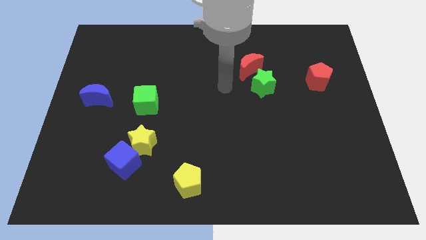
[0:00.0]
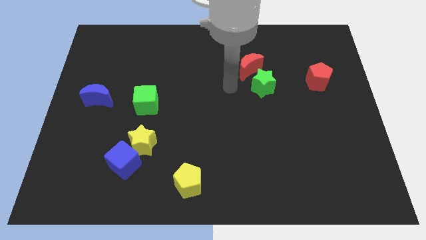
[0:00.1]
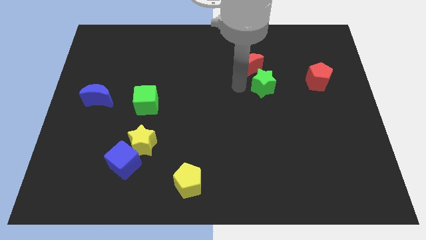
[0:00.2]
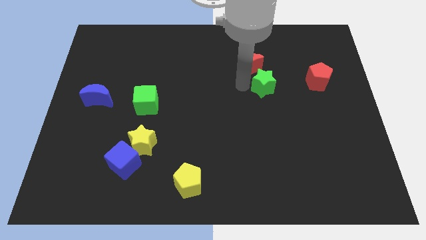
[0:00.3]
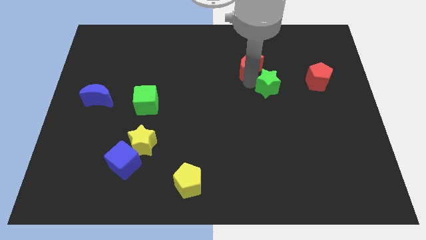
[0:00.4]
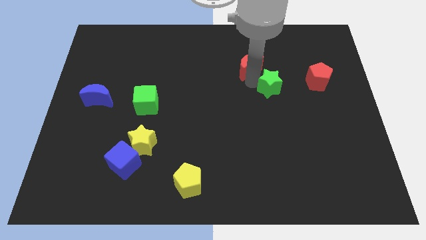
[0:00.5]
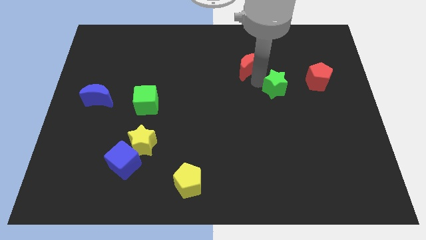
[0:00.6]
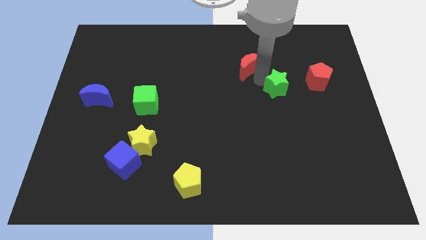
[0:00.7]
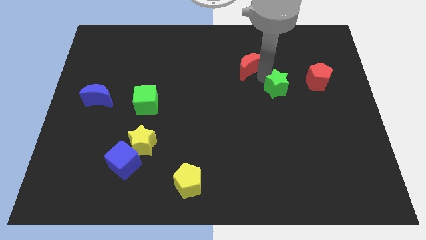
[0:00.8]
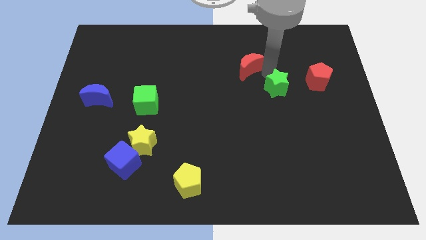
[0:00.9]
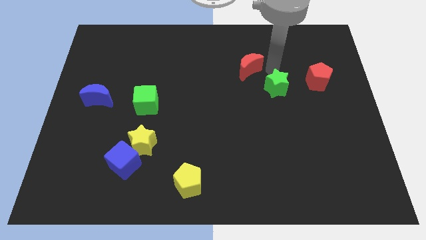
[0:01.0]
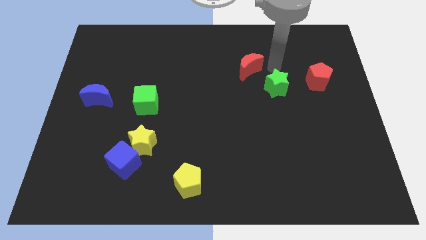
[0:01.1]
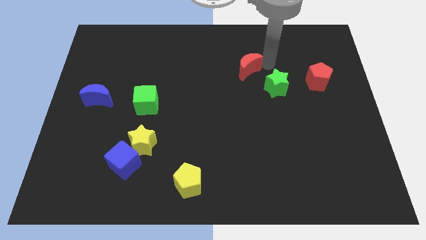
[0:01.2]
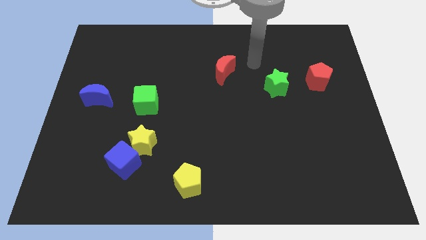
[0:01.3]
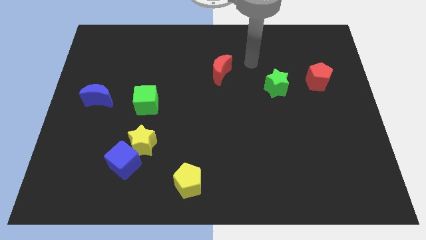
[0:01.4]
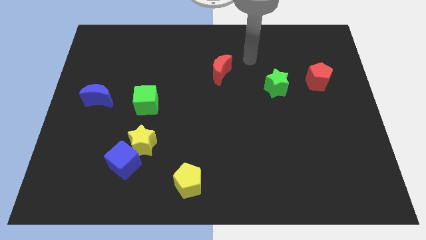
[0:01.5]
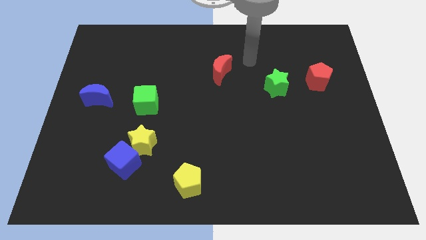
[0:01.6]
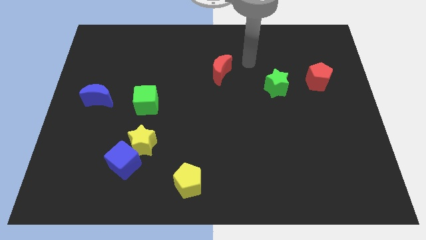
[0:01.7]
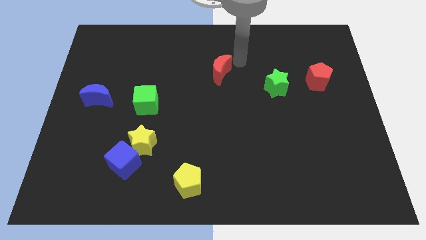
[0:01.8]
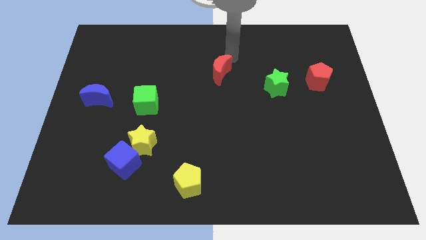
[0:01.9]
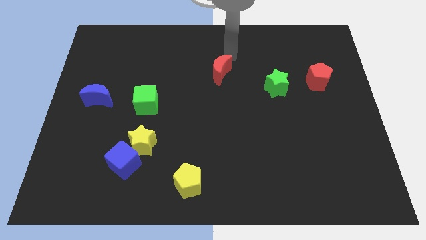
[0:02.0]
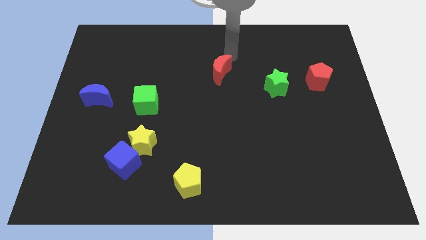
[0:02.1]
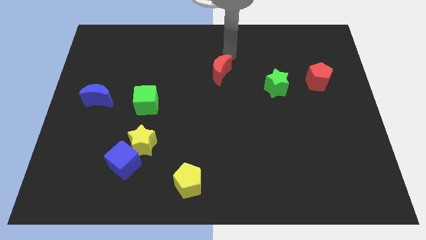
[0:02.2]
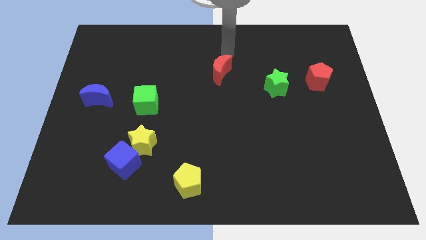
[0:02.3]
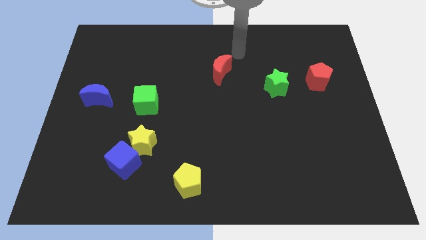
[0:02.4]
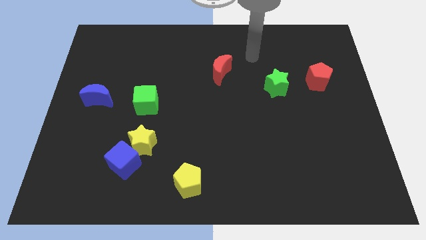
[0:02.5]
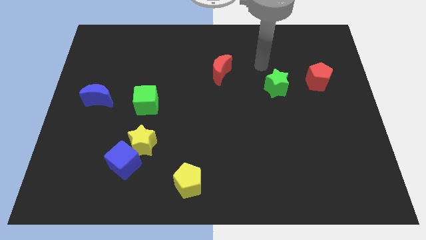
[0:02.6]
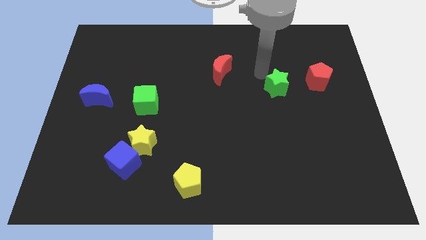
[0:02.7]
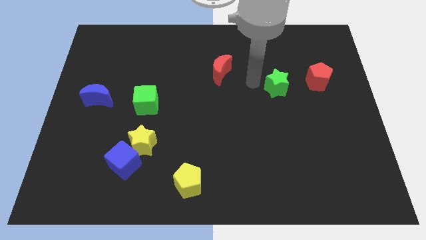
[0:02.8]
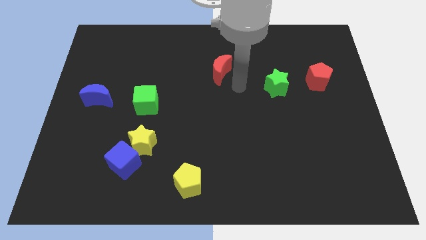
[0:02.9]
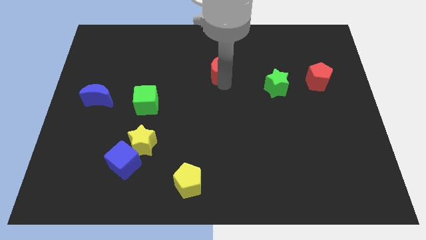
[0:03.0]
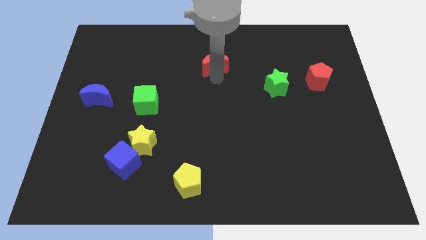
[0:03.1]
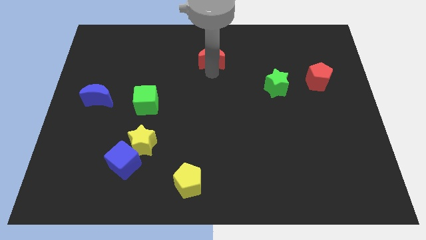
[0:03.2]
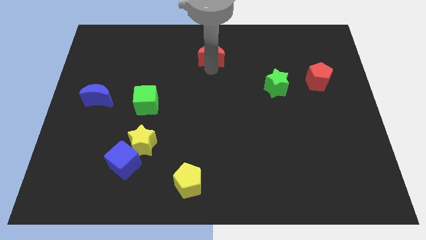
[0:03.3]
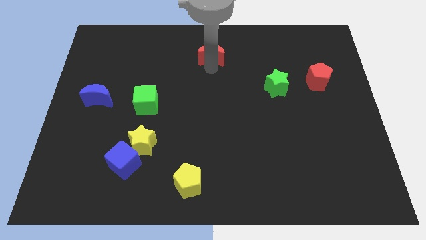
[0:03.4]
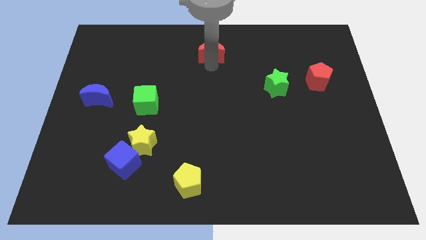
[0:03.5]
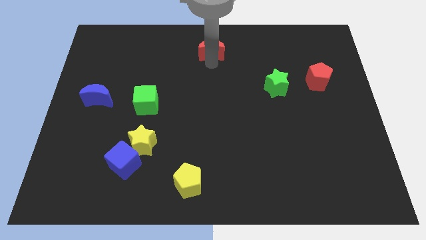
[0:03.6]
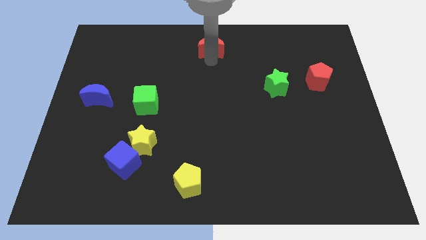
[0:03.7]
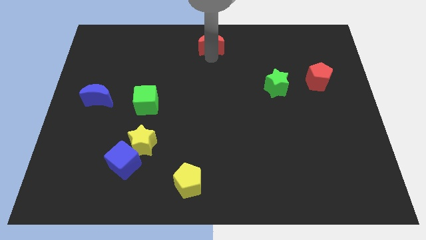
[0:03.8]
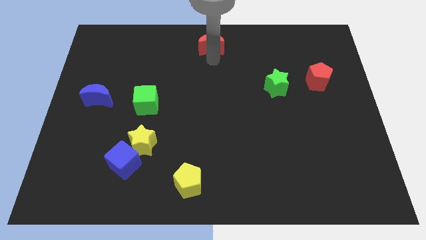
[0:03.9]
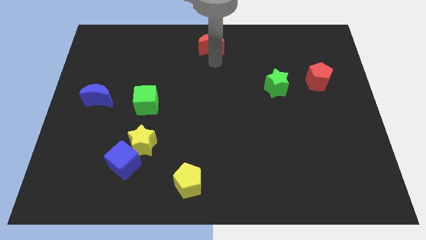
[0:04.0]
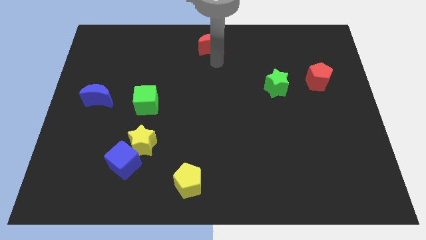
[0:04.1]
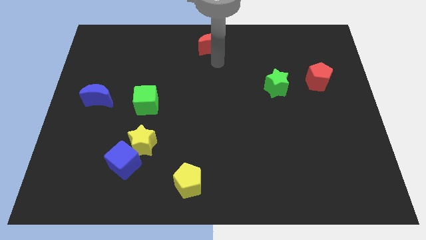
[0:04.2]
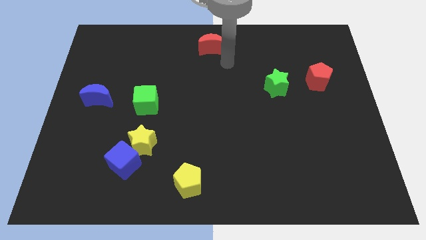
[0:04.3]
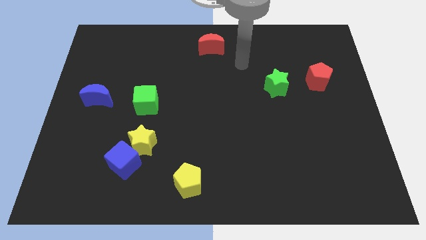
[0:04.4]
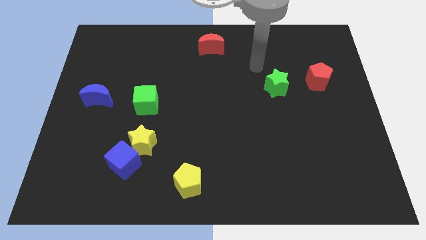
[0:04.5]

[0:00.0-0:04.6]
push the red moon to the top center of the board

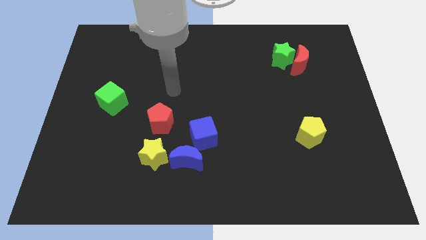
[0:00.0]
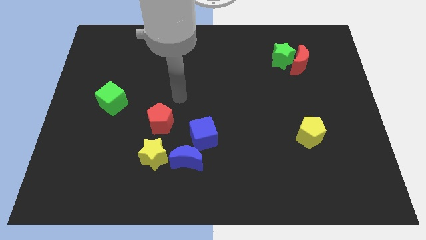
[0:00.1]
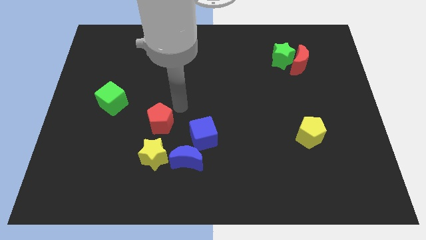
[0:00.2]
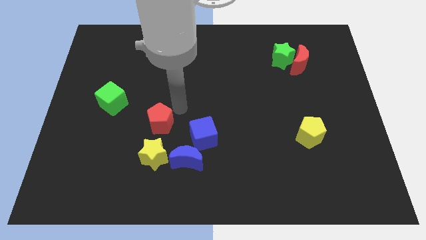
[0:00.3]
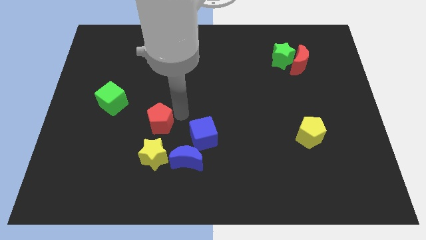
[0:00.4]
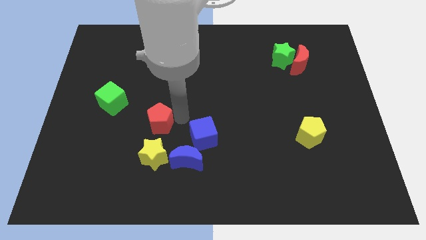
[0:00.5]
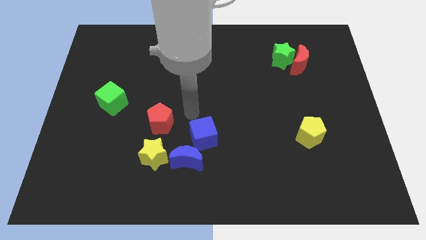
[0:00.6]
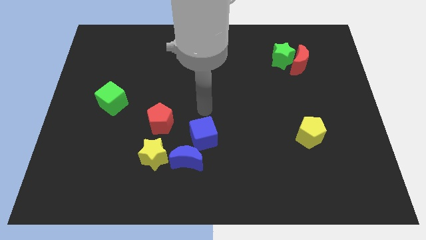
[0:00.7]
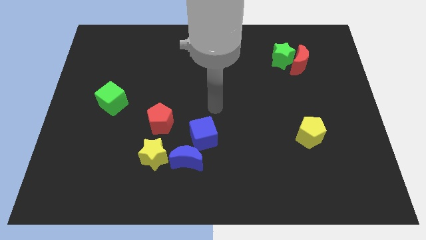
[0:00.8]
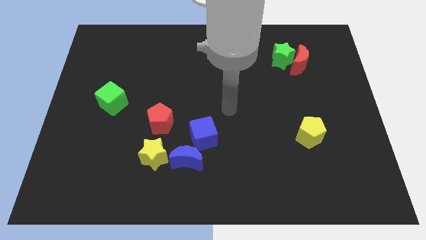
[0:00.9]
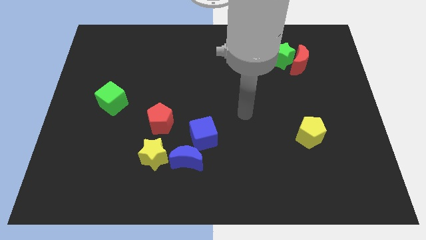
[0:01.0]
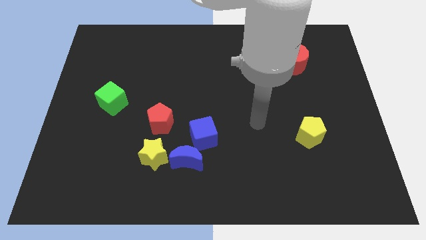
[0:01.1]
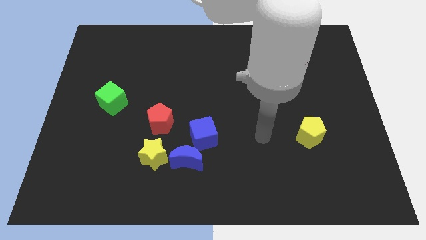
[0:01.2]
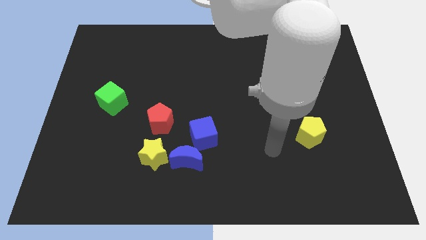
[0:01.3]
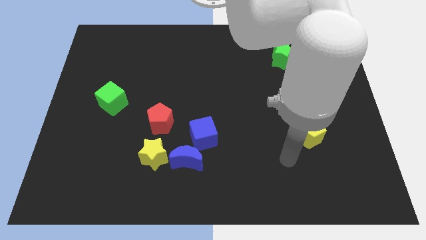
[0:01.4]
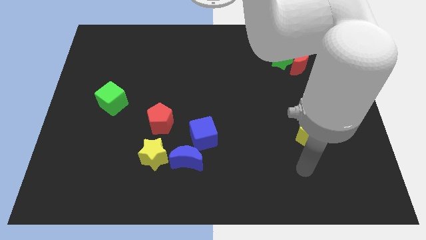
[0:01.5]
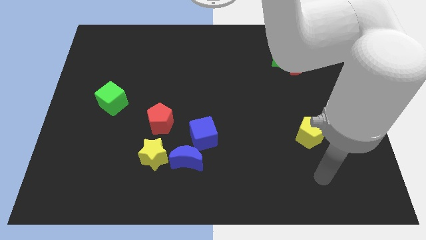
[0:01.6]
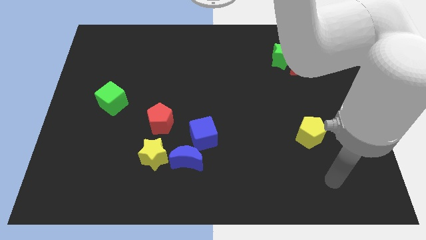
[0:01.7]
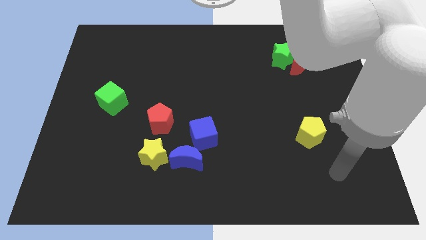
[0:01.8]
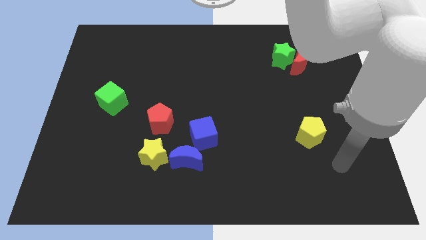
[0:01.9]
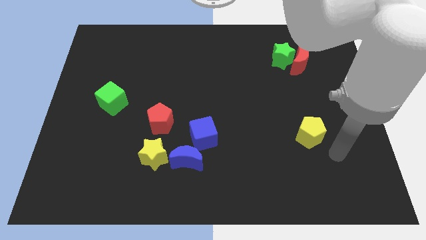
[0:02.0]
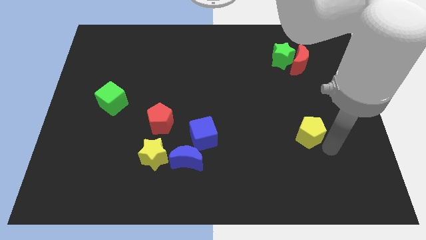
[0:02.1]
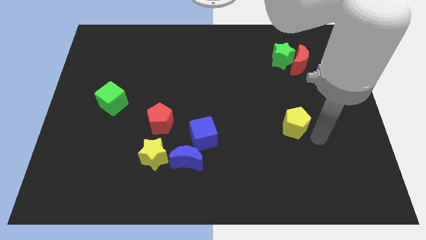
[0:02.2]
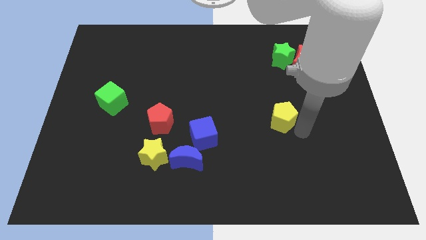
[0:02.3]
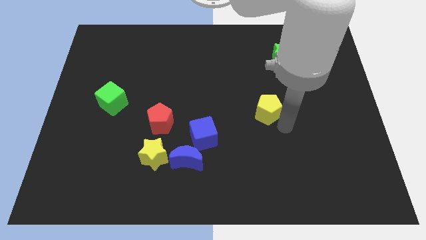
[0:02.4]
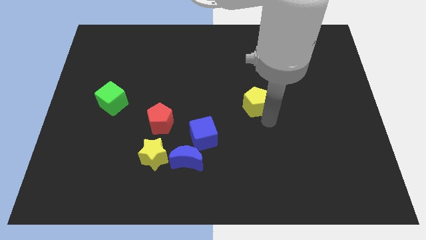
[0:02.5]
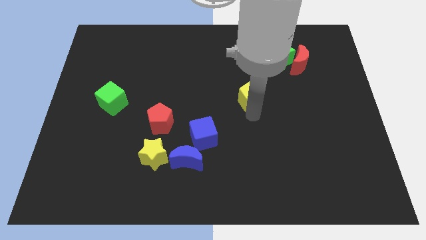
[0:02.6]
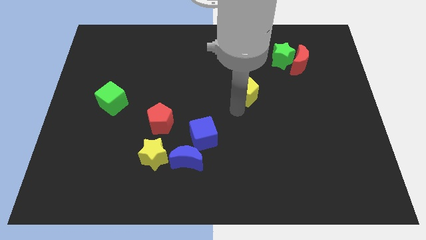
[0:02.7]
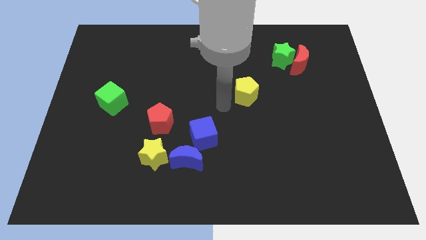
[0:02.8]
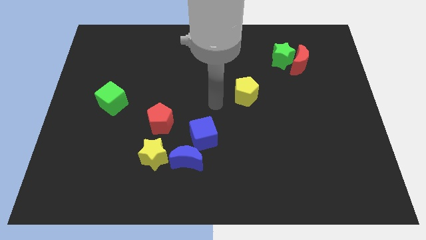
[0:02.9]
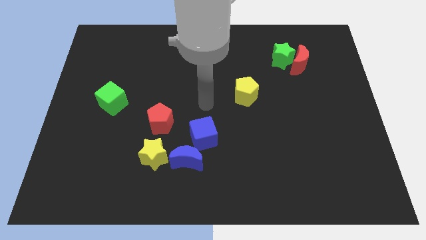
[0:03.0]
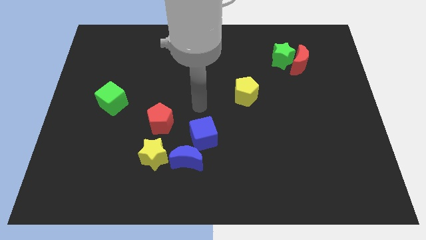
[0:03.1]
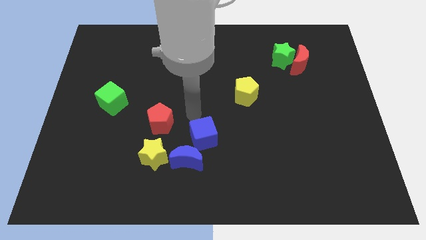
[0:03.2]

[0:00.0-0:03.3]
place the yellow pentagon in between the green star and blue cube

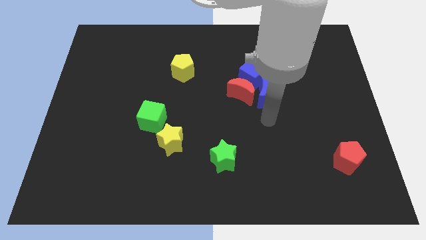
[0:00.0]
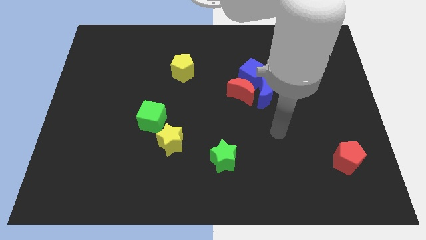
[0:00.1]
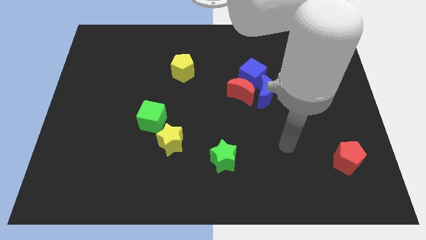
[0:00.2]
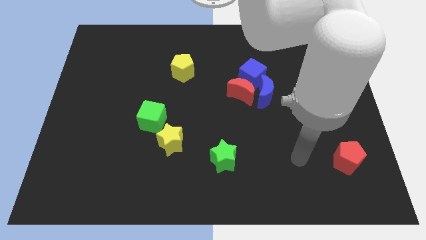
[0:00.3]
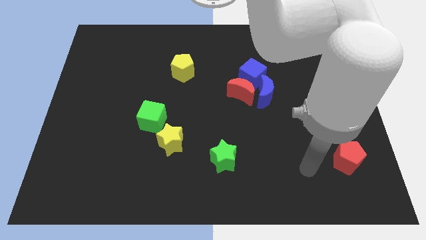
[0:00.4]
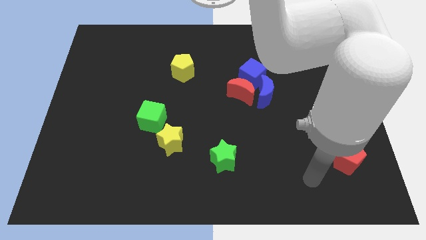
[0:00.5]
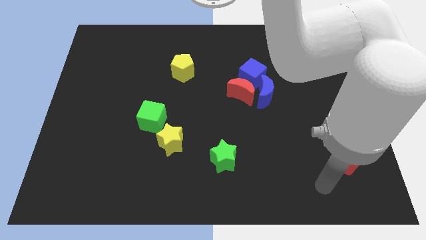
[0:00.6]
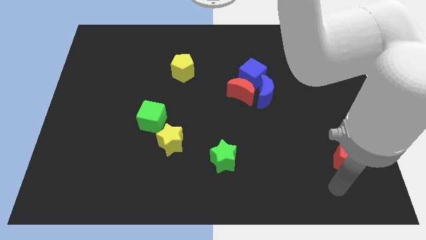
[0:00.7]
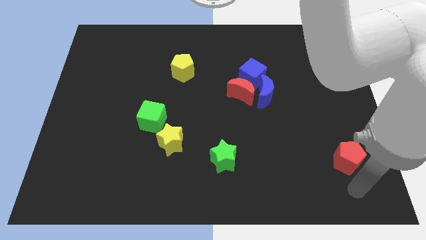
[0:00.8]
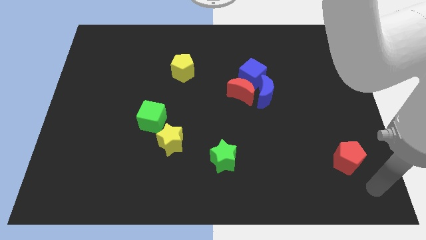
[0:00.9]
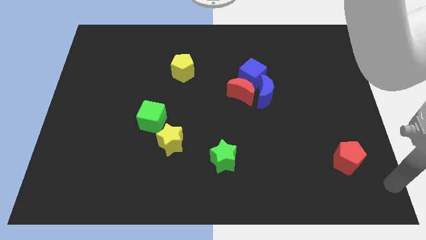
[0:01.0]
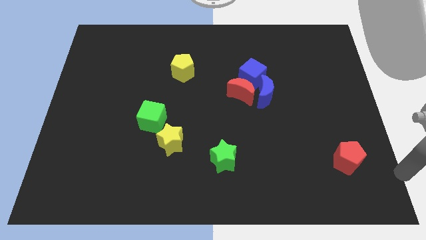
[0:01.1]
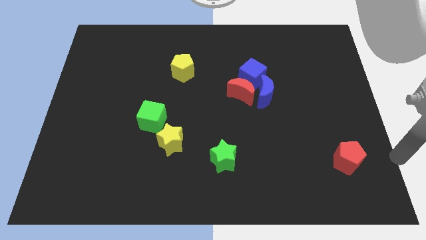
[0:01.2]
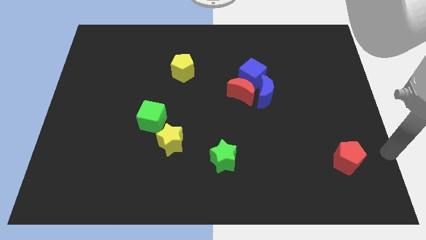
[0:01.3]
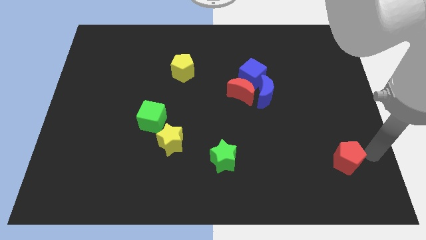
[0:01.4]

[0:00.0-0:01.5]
place your arm to the right of the red pentagon
